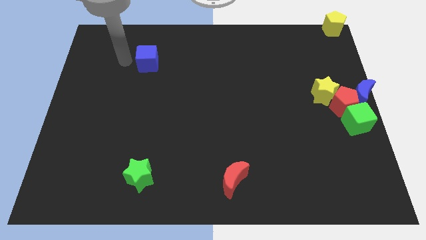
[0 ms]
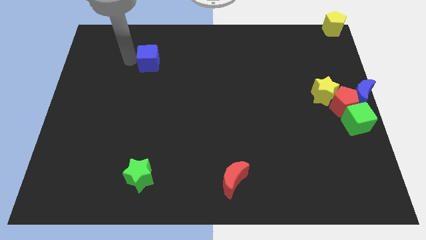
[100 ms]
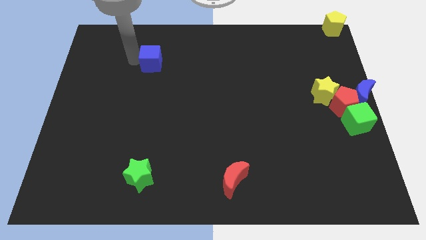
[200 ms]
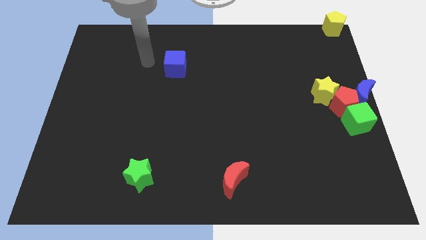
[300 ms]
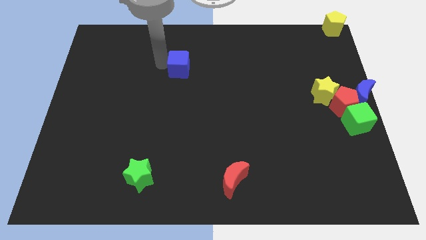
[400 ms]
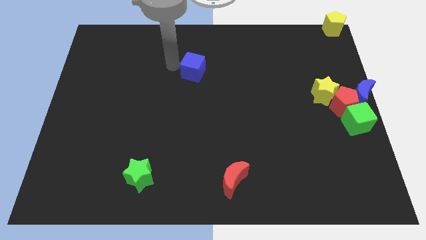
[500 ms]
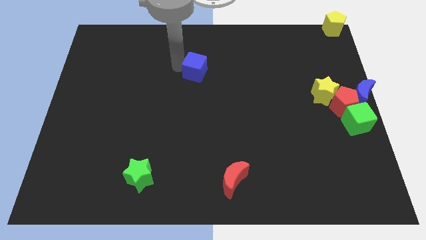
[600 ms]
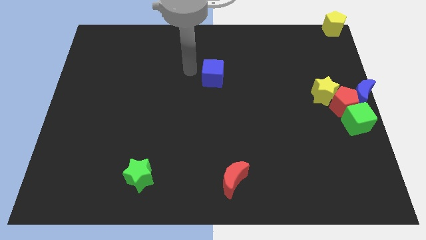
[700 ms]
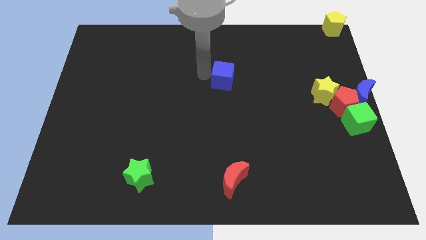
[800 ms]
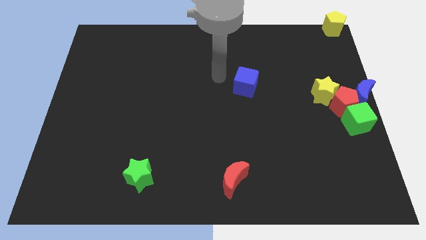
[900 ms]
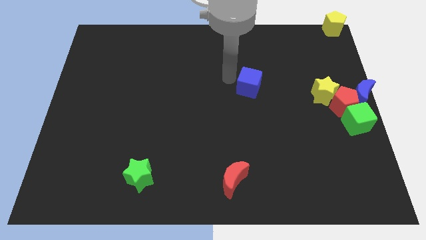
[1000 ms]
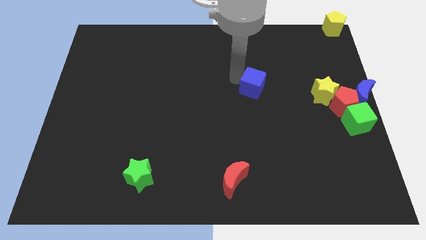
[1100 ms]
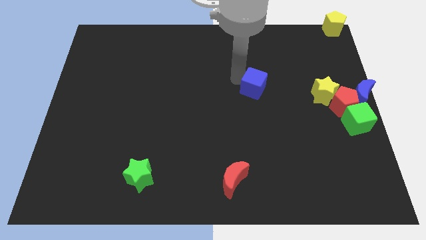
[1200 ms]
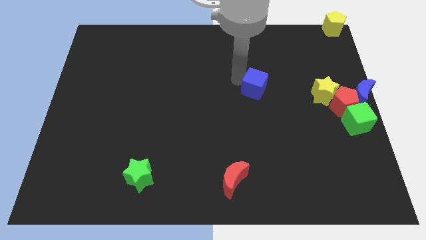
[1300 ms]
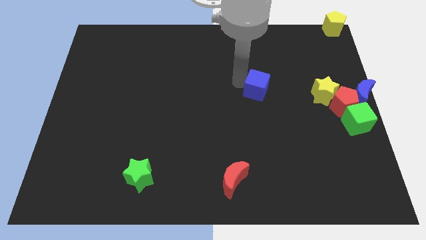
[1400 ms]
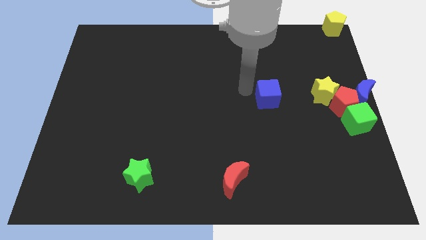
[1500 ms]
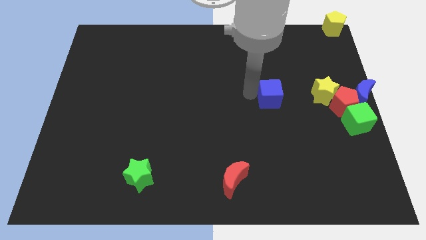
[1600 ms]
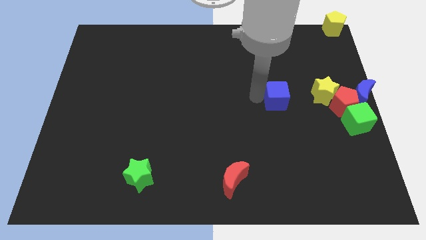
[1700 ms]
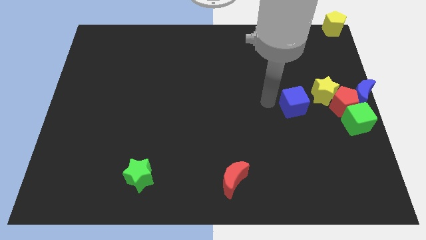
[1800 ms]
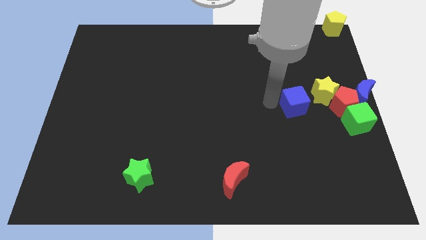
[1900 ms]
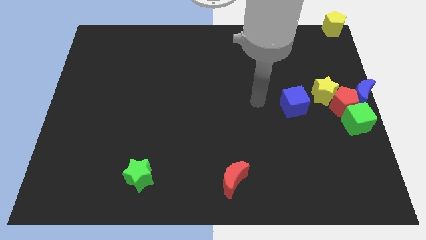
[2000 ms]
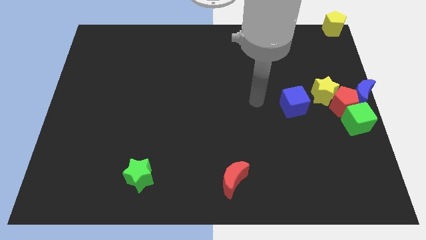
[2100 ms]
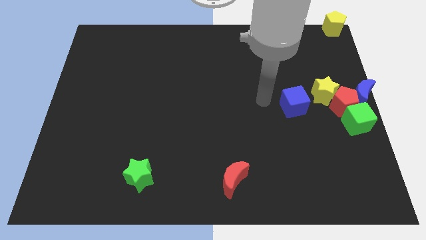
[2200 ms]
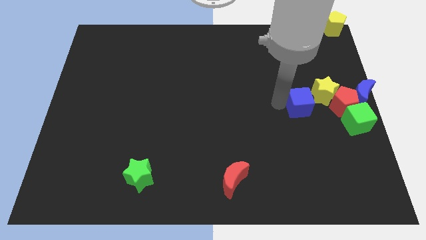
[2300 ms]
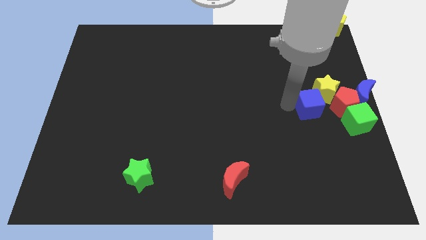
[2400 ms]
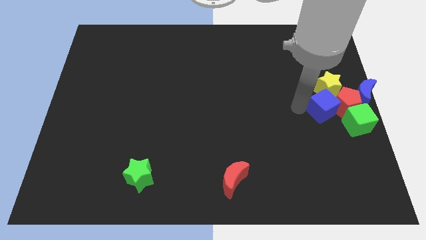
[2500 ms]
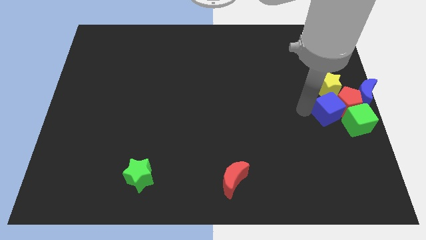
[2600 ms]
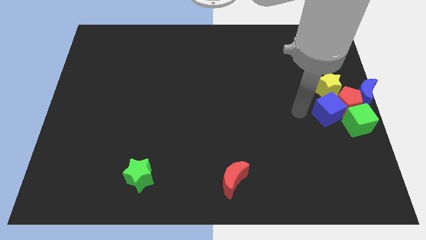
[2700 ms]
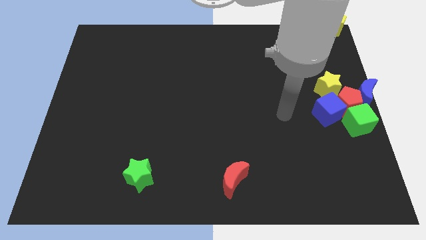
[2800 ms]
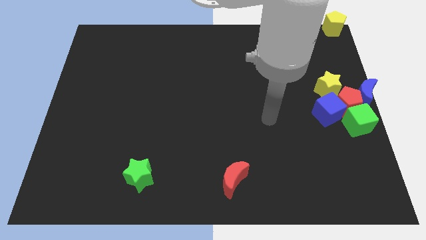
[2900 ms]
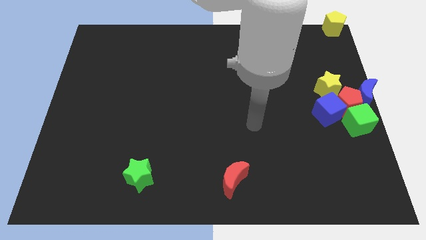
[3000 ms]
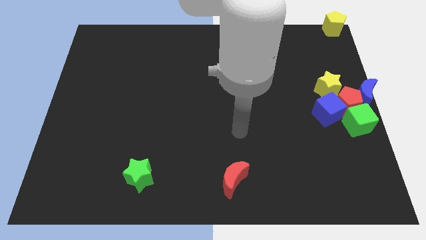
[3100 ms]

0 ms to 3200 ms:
push the blue cube to the left of the red pentagon

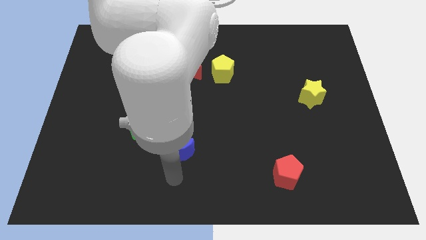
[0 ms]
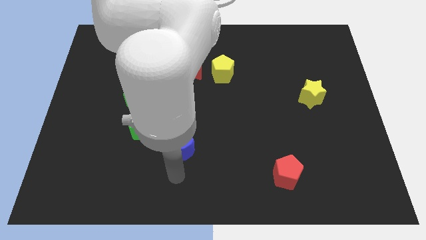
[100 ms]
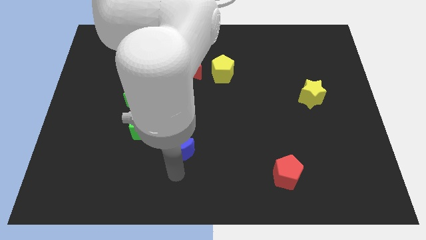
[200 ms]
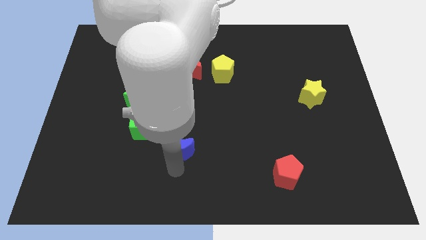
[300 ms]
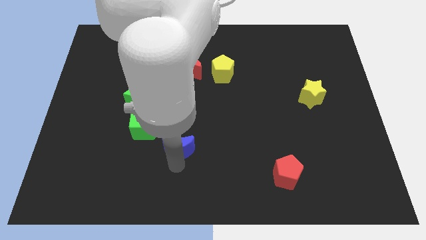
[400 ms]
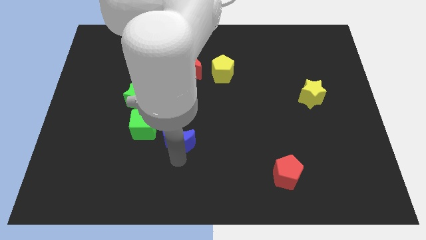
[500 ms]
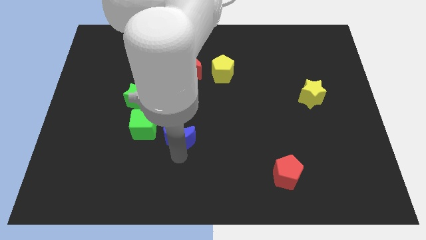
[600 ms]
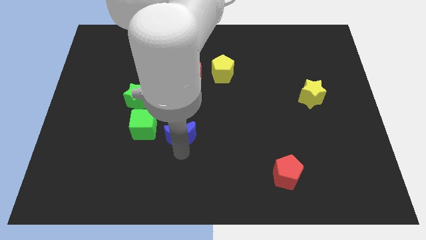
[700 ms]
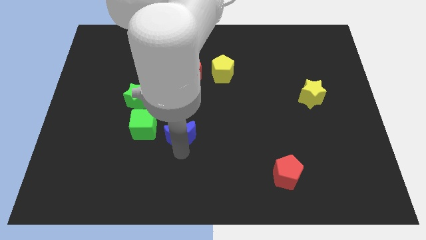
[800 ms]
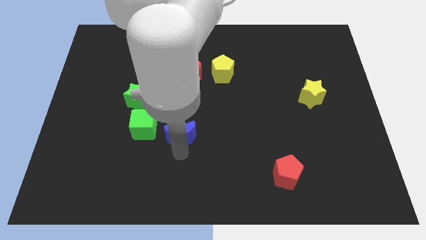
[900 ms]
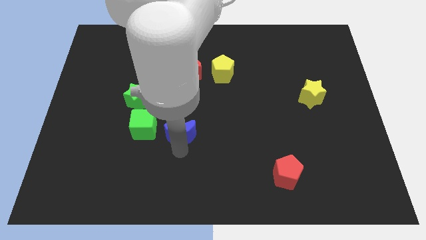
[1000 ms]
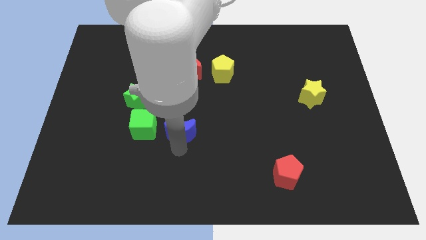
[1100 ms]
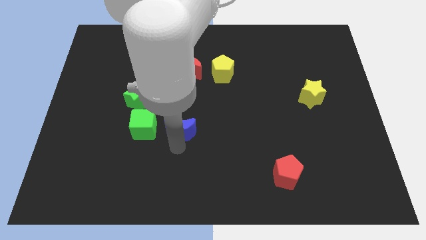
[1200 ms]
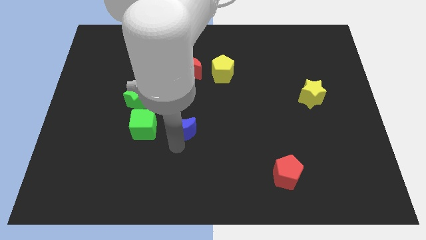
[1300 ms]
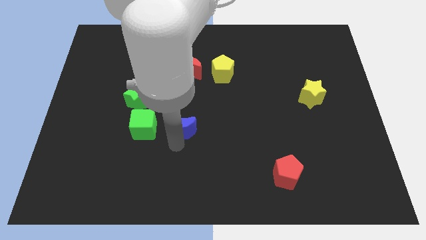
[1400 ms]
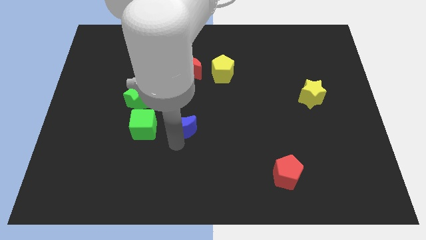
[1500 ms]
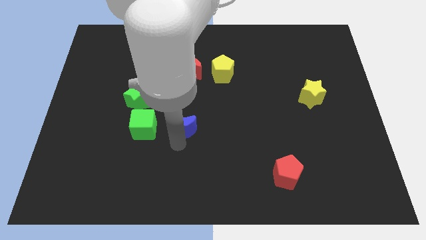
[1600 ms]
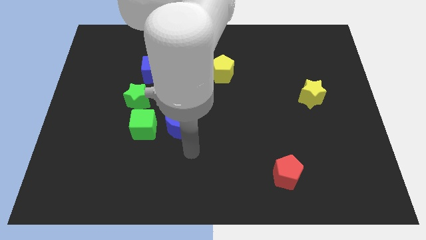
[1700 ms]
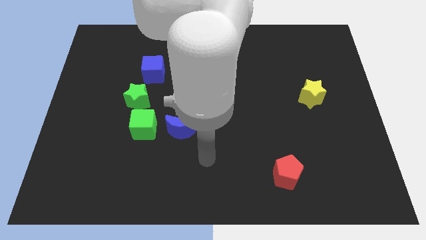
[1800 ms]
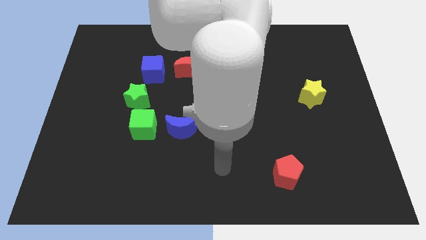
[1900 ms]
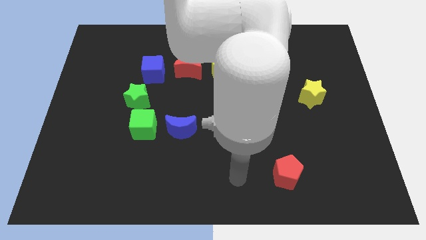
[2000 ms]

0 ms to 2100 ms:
slide blue moon to the right of green cube

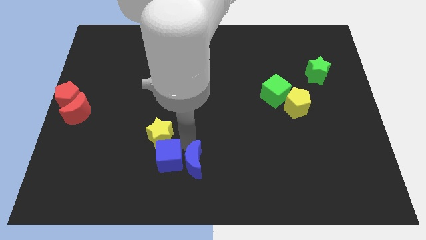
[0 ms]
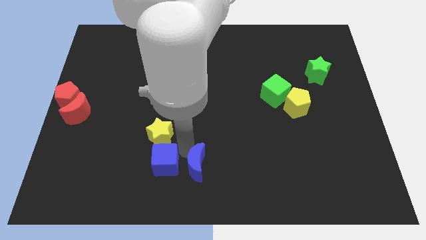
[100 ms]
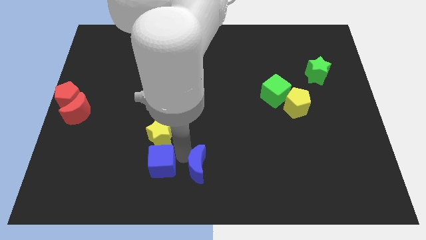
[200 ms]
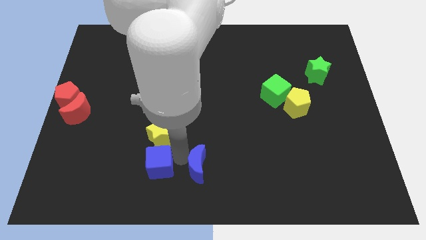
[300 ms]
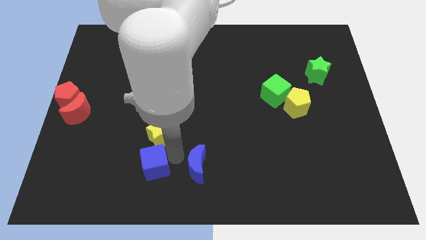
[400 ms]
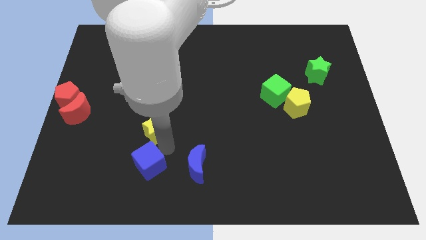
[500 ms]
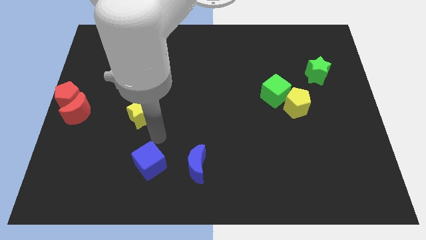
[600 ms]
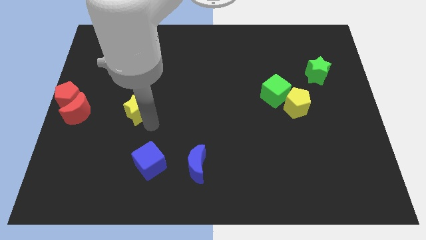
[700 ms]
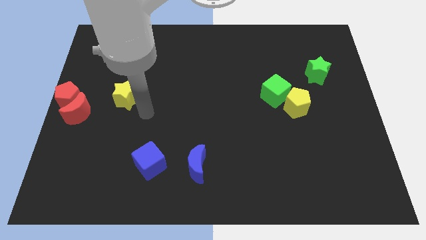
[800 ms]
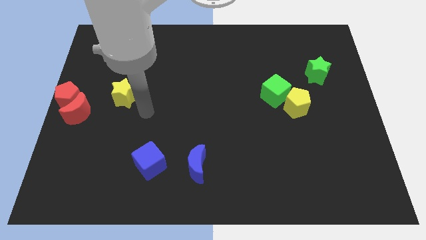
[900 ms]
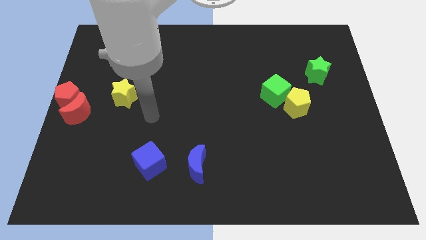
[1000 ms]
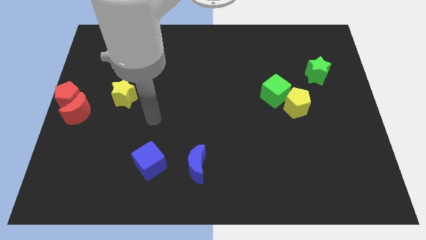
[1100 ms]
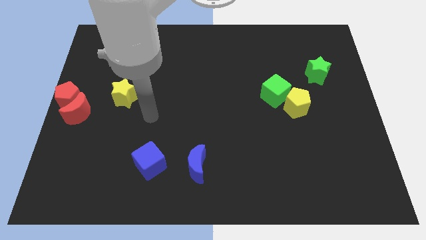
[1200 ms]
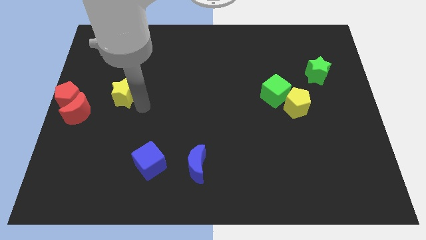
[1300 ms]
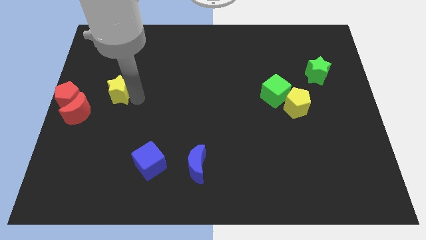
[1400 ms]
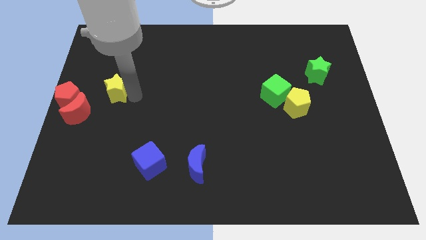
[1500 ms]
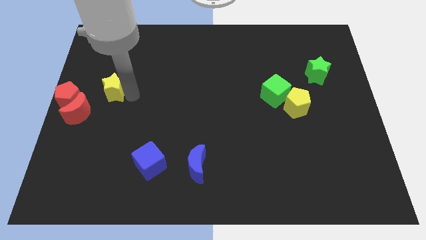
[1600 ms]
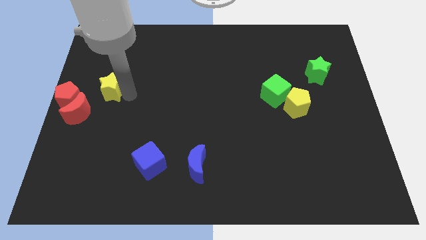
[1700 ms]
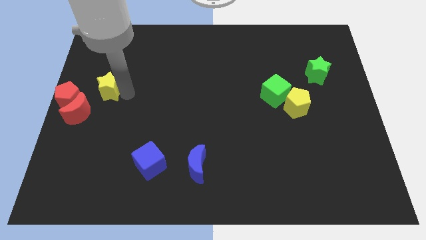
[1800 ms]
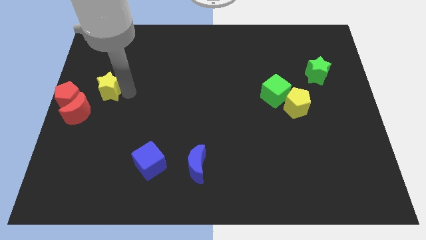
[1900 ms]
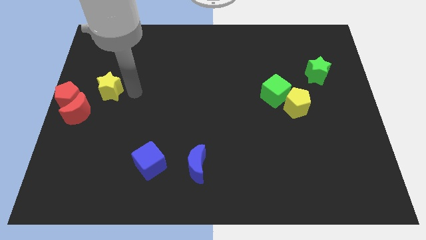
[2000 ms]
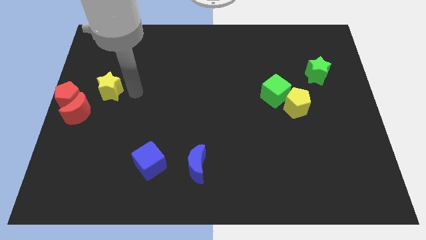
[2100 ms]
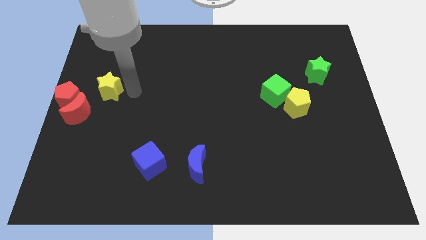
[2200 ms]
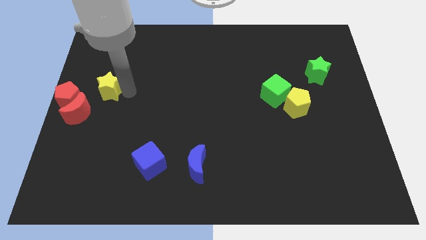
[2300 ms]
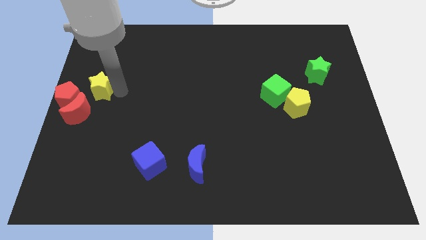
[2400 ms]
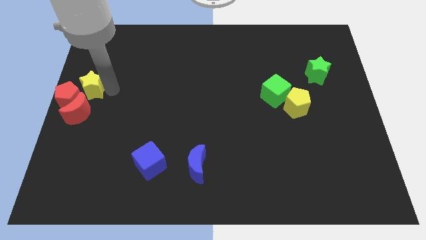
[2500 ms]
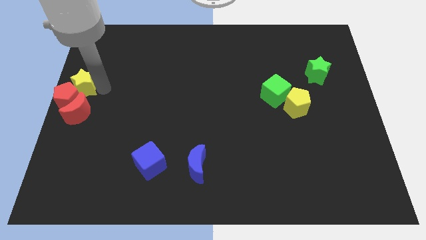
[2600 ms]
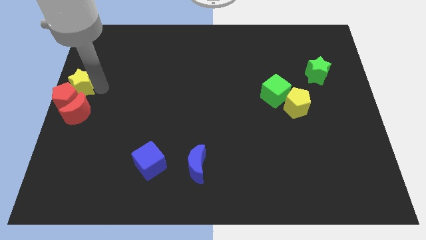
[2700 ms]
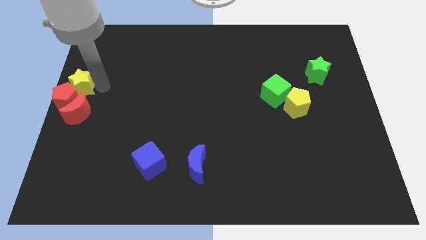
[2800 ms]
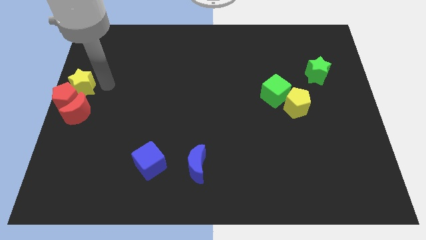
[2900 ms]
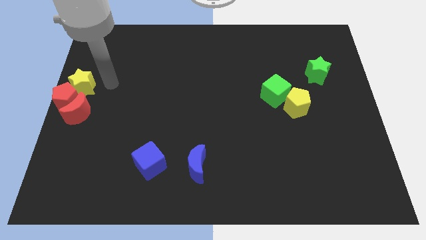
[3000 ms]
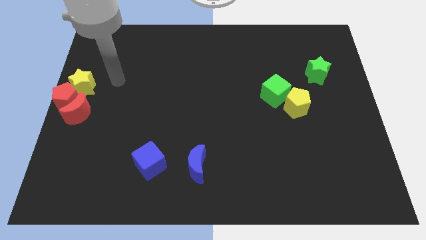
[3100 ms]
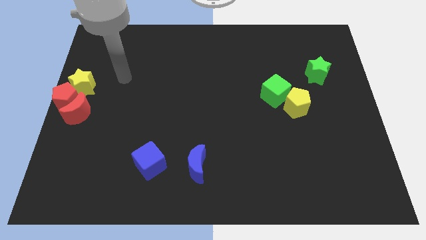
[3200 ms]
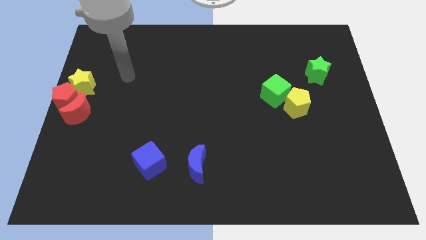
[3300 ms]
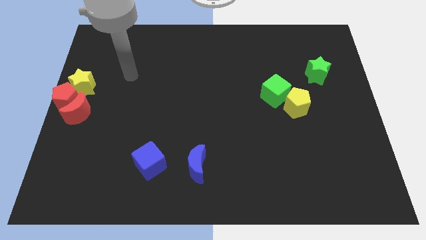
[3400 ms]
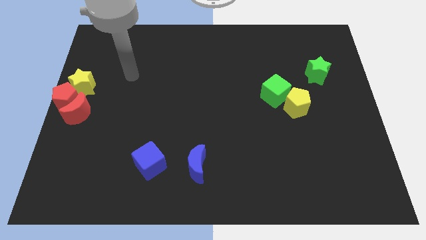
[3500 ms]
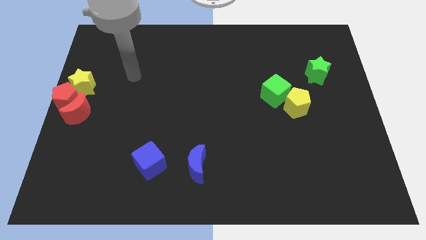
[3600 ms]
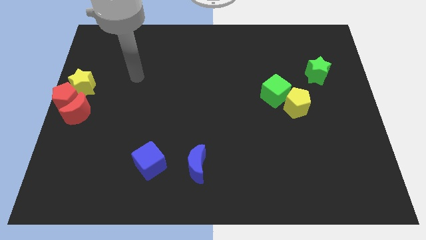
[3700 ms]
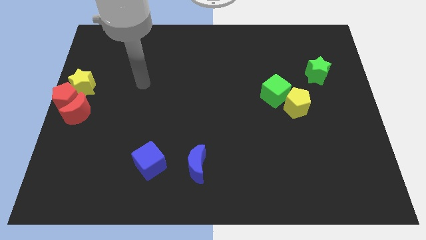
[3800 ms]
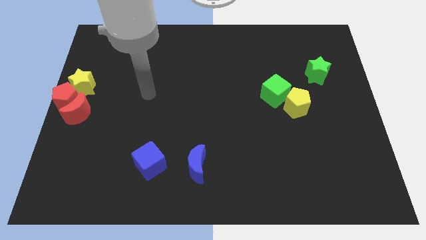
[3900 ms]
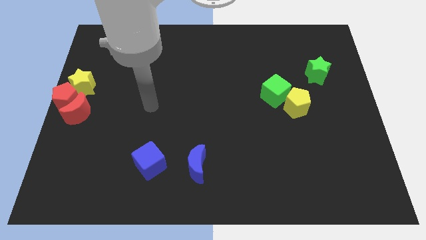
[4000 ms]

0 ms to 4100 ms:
separate the yellow star from the blue cube
